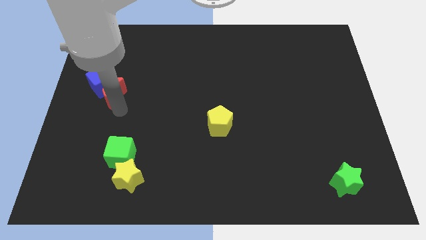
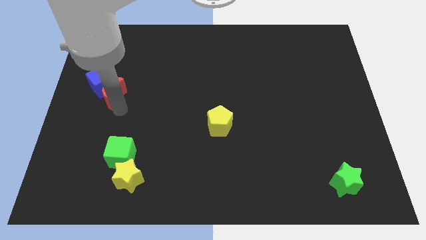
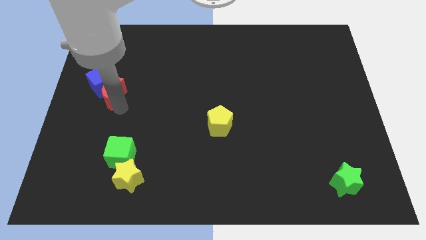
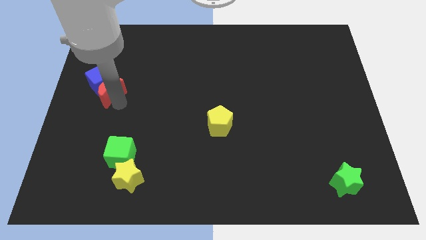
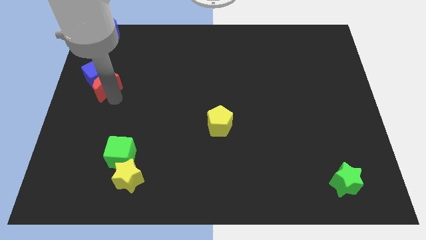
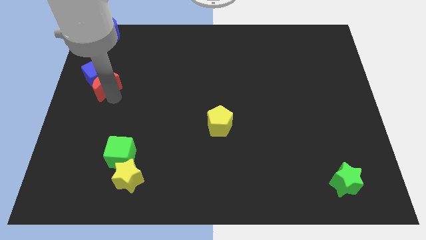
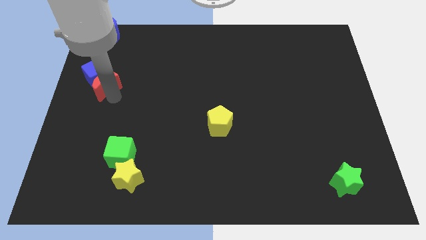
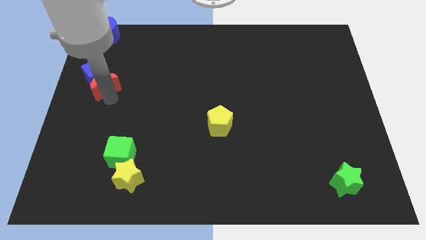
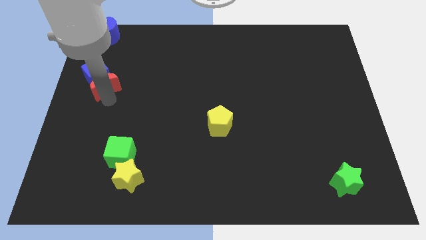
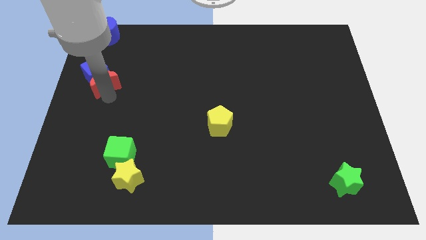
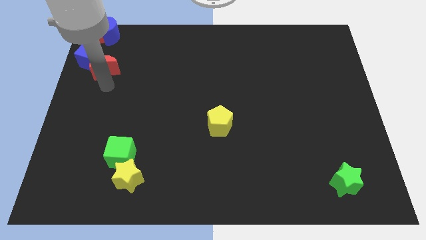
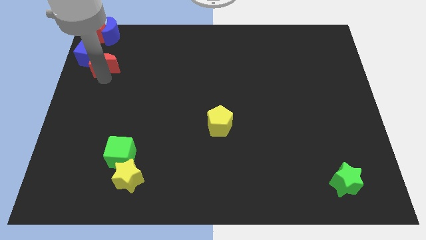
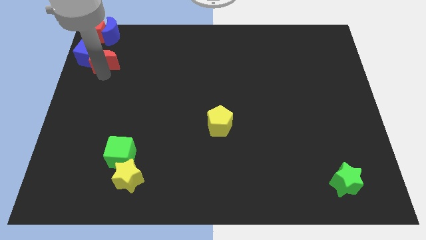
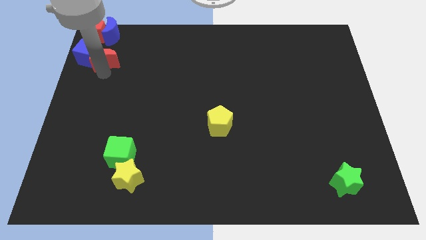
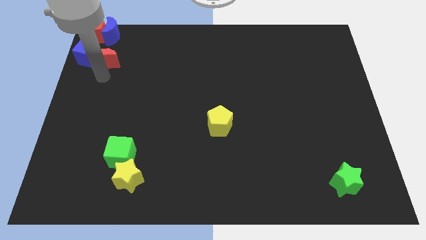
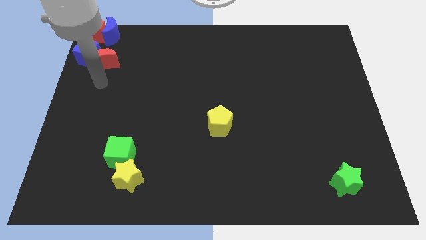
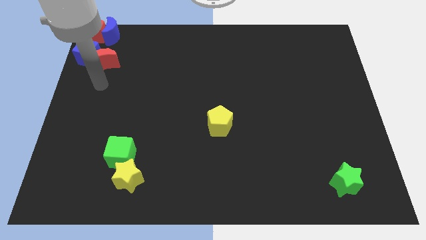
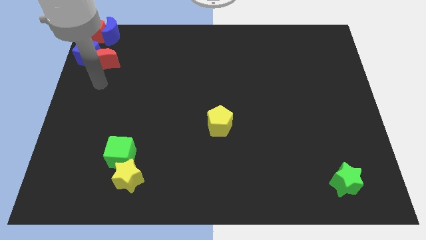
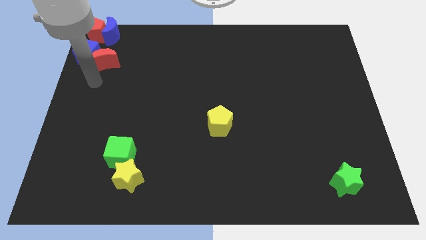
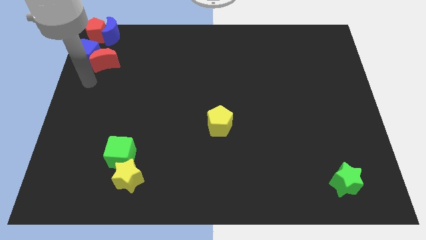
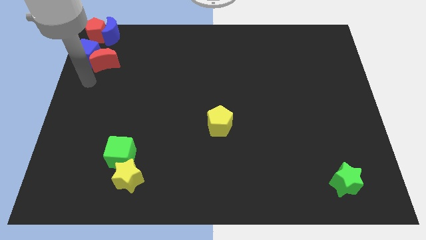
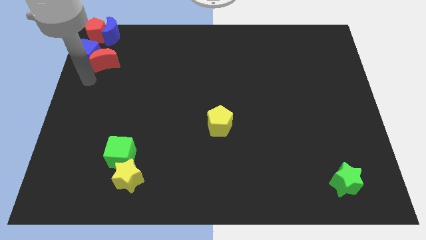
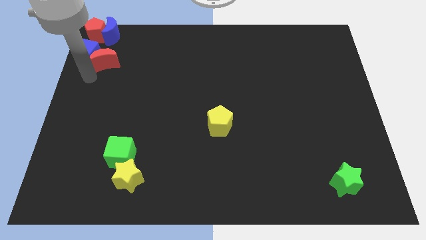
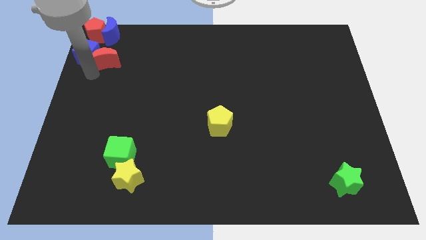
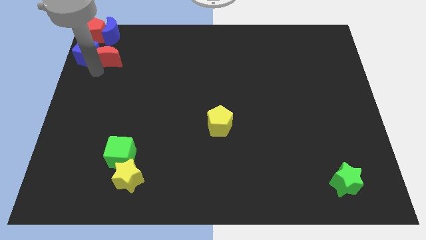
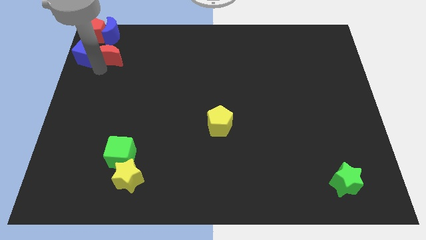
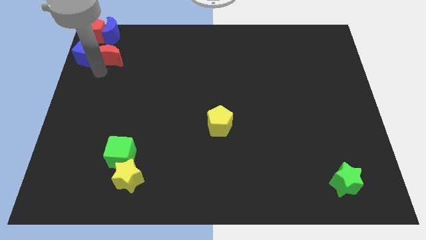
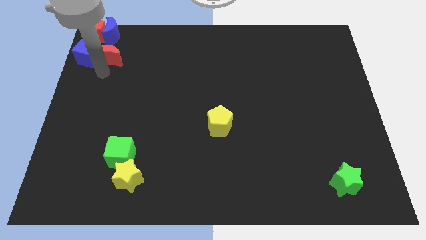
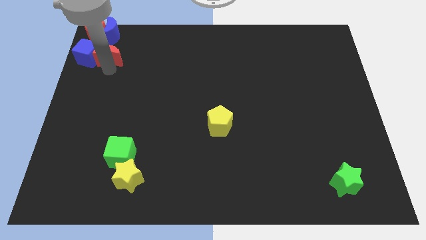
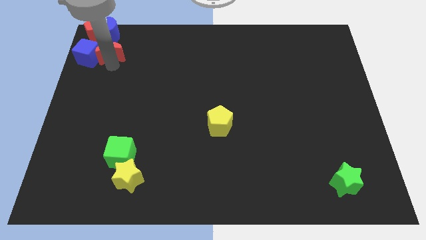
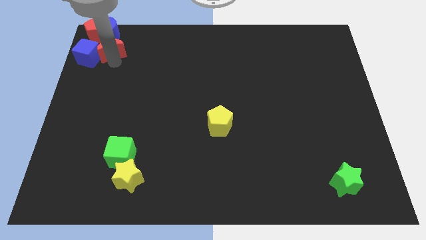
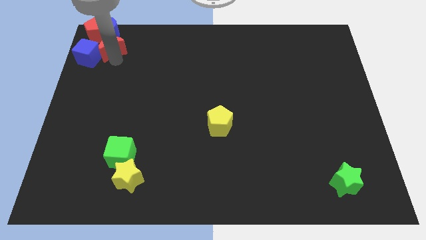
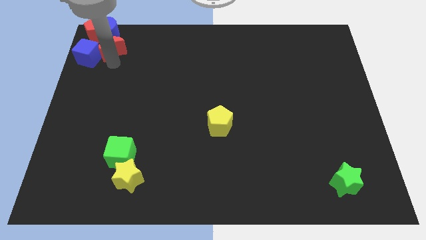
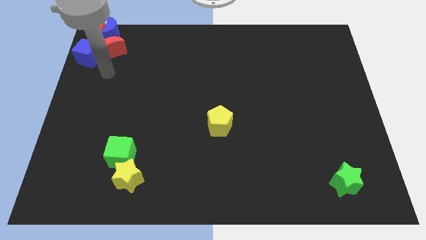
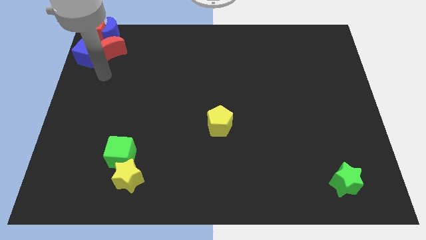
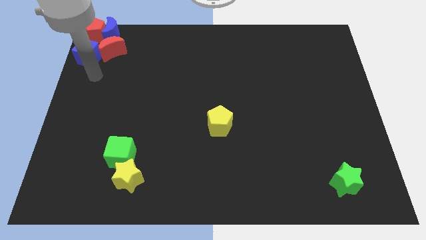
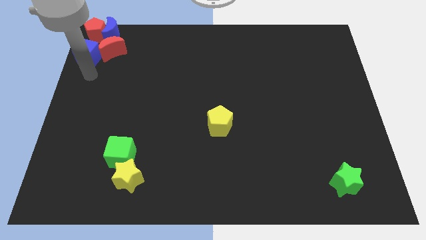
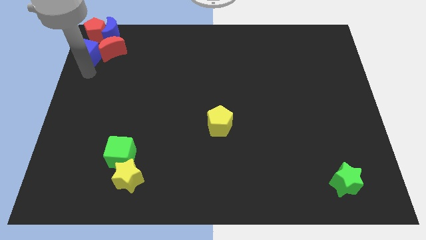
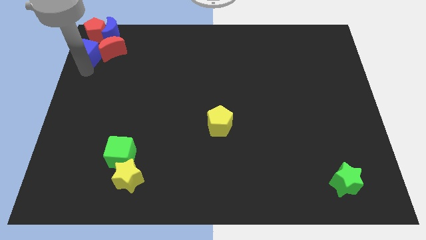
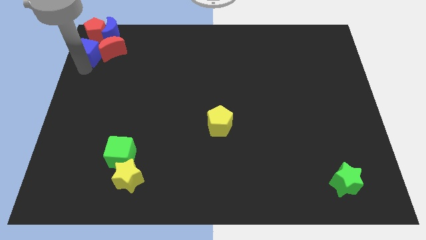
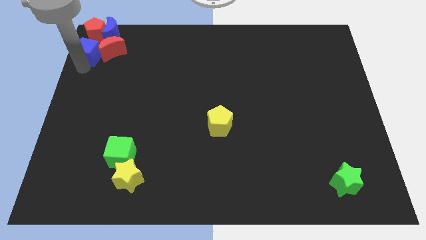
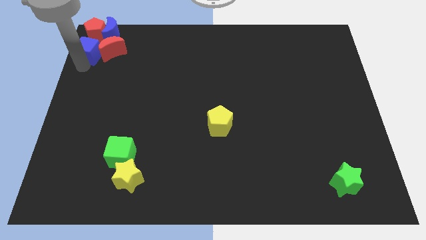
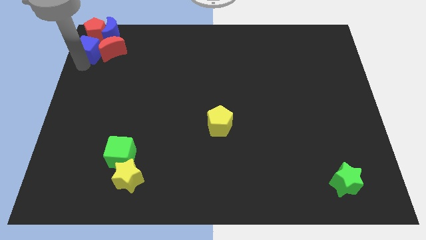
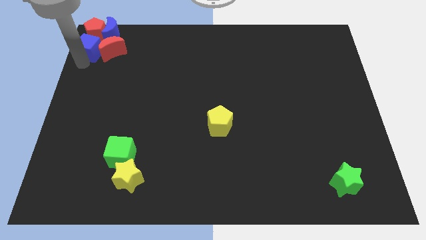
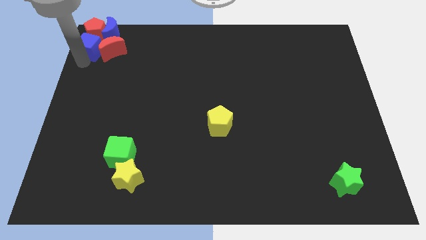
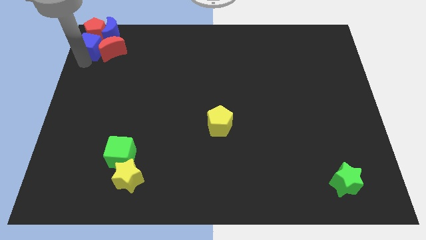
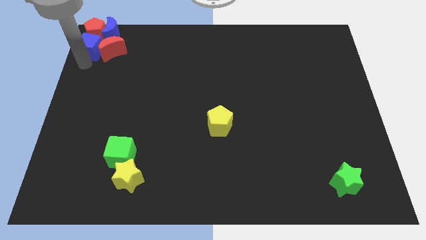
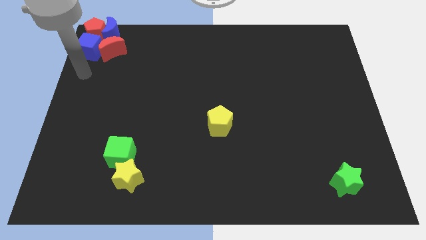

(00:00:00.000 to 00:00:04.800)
group up the red crescent blue cube red pentagon and blue crescent at the top left of the table

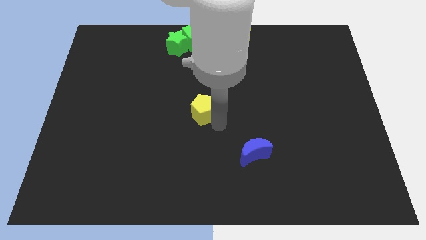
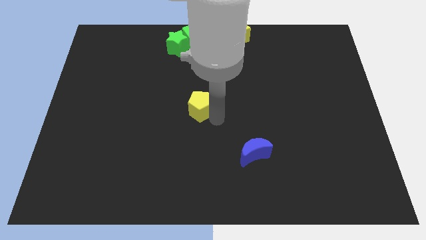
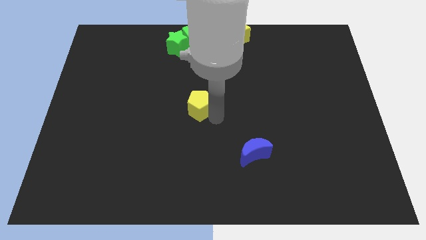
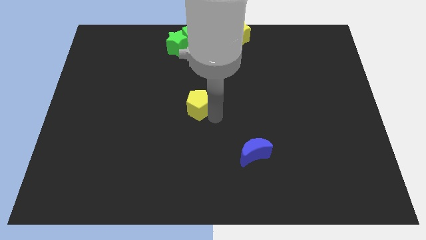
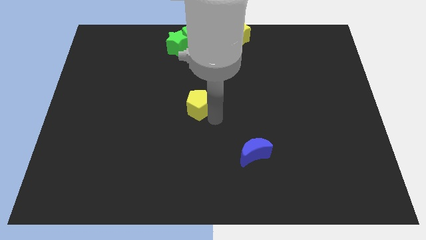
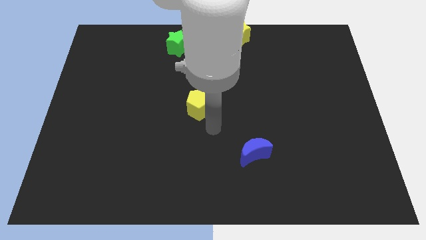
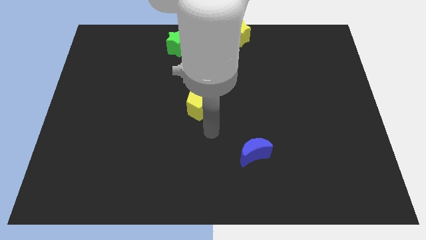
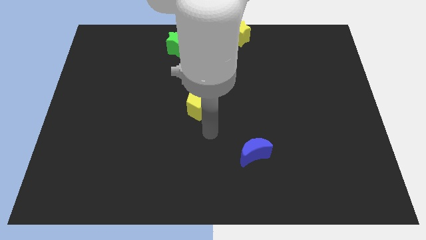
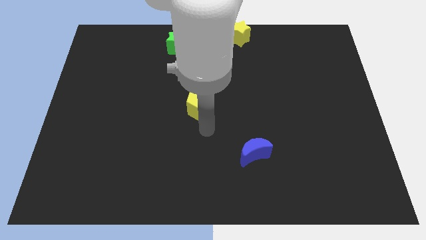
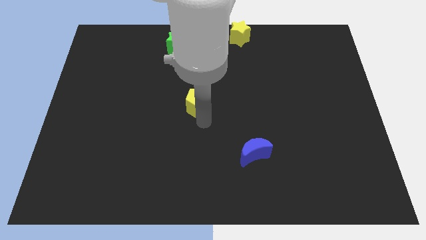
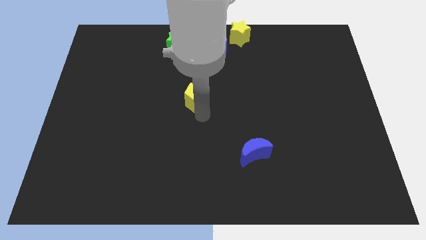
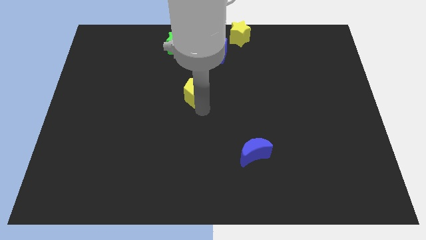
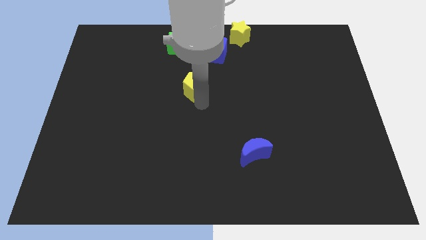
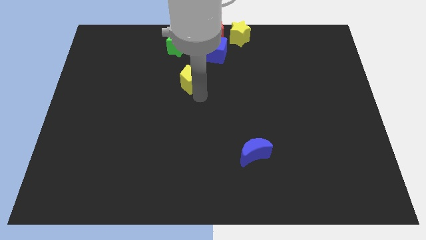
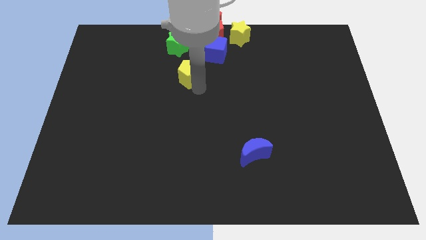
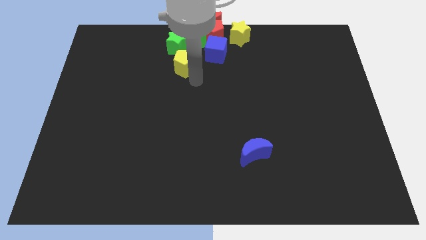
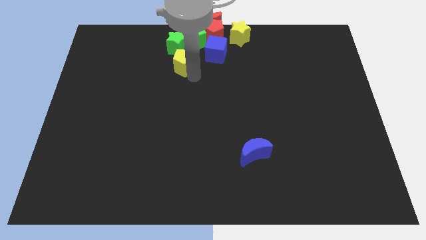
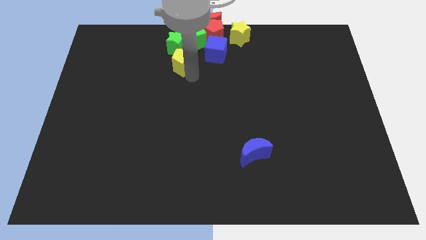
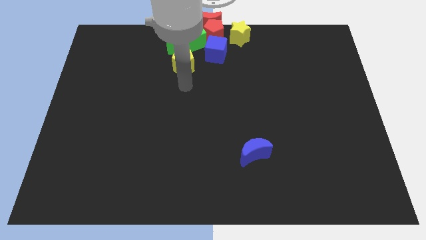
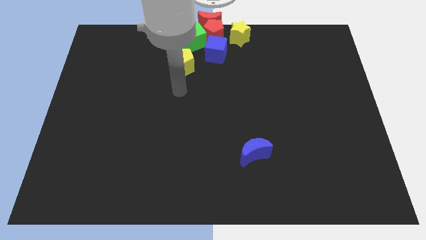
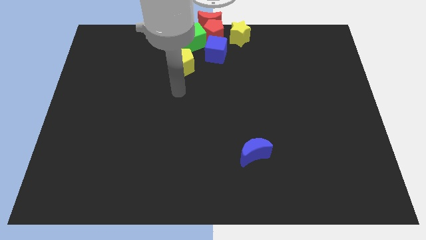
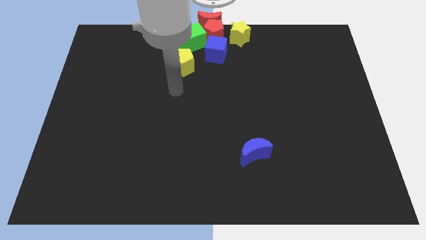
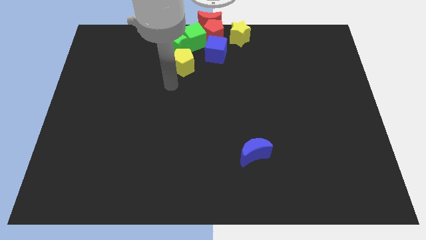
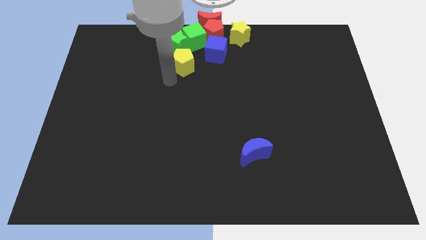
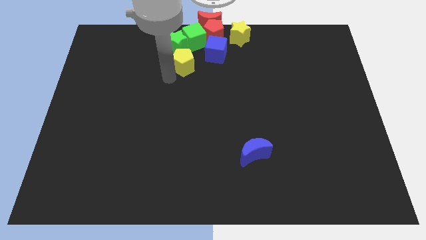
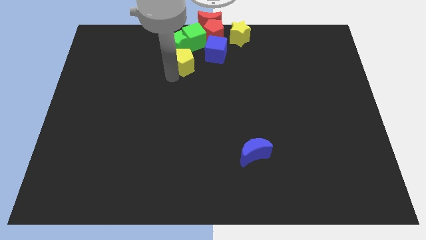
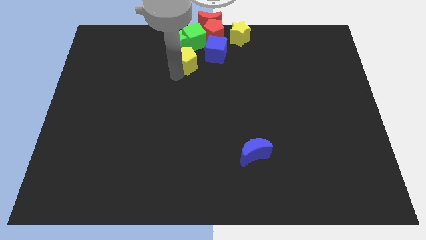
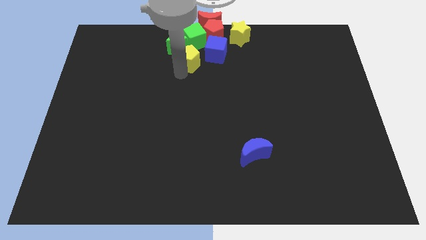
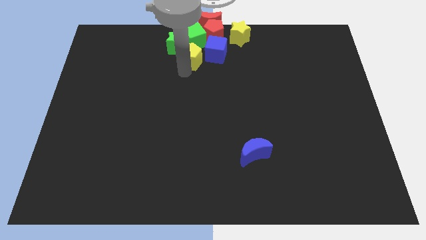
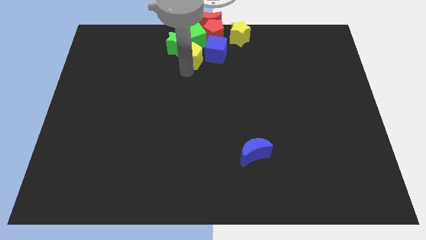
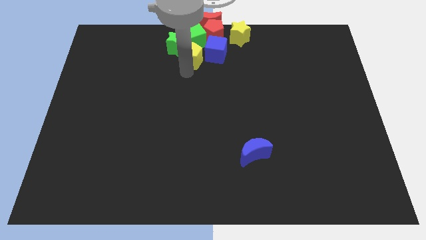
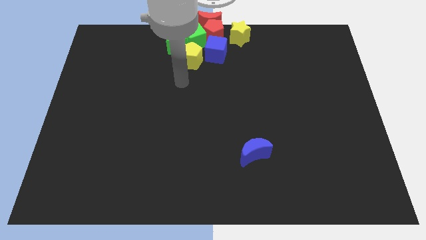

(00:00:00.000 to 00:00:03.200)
slide the yellow pentagon into the group of blocks at the top center of the table

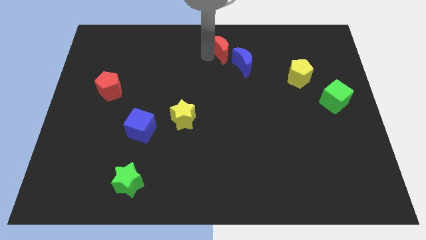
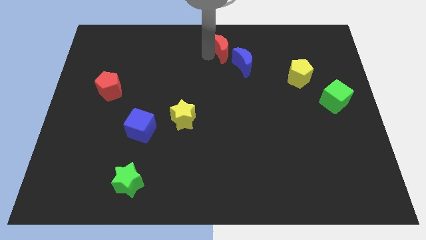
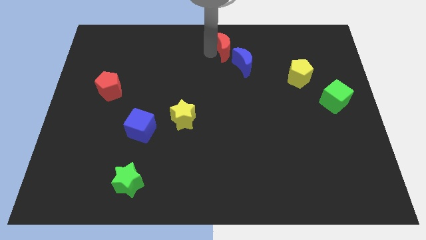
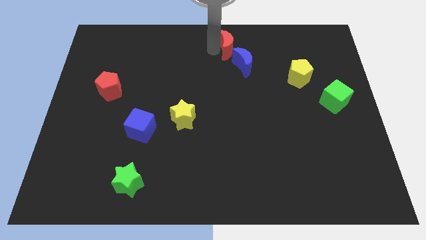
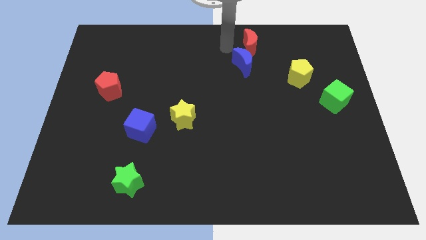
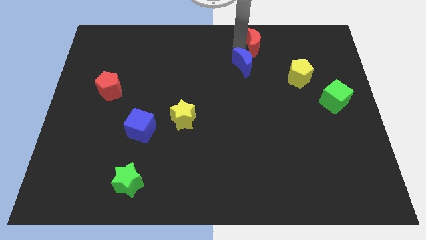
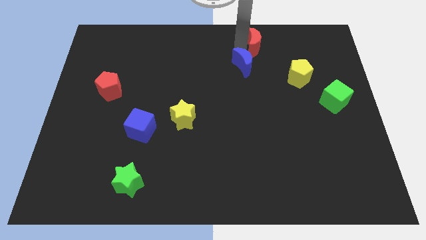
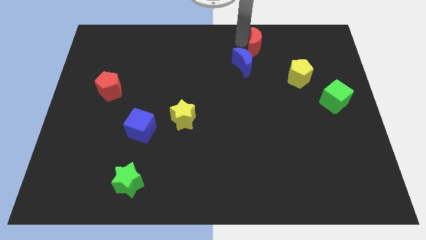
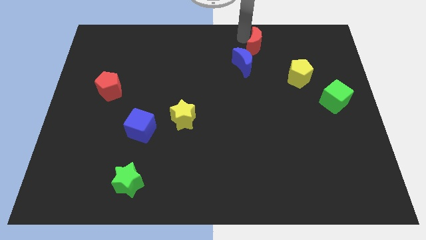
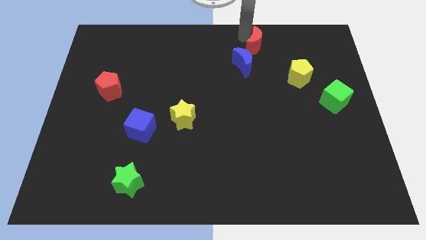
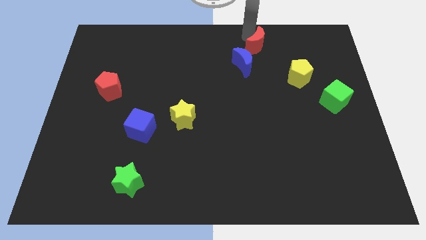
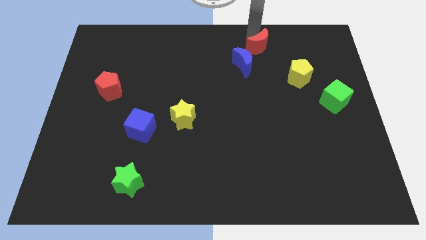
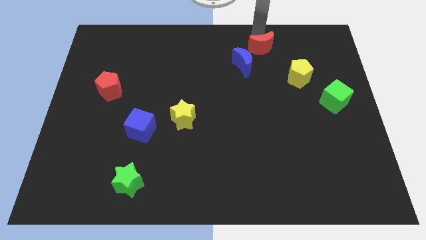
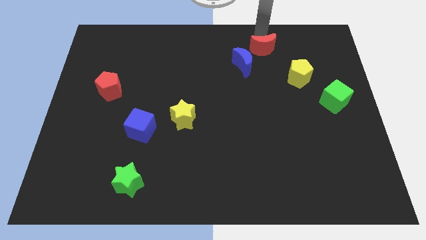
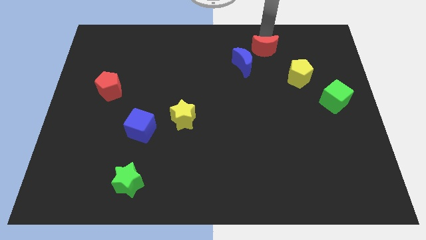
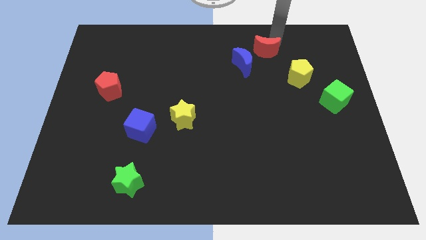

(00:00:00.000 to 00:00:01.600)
place red moon to the top right of blue moon
